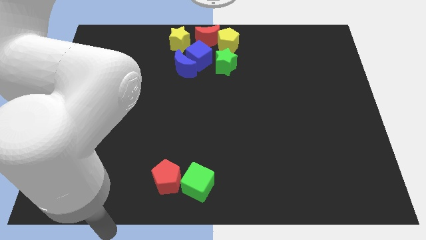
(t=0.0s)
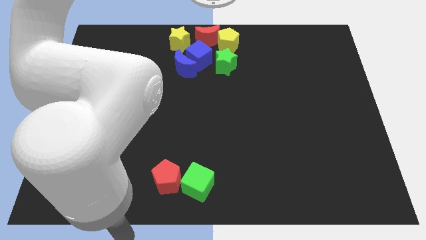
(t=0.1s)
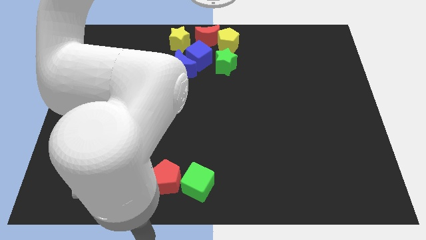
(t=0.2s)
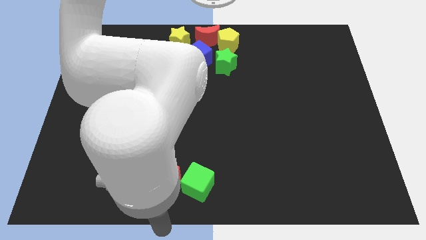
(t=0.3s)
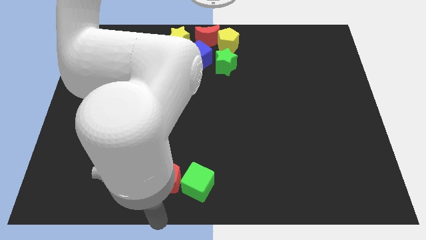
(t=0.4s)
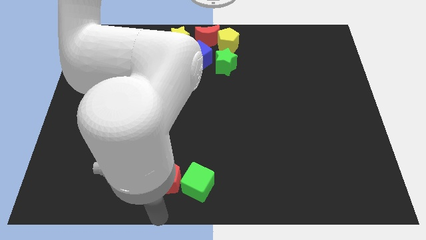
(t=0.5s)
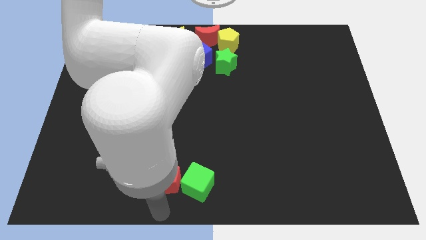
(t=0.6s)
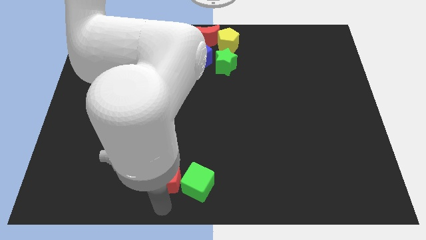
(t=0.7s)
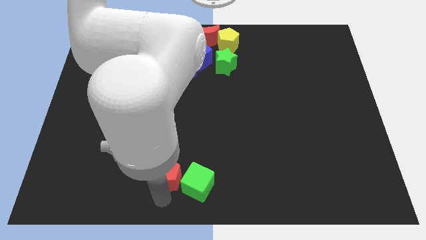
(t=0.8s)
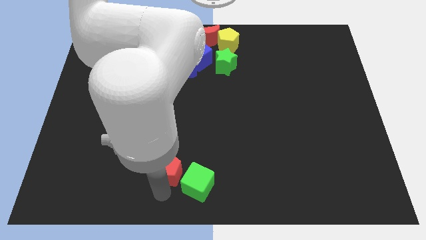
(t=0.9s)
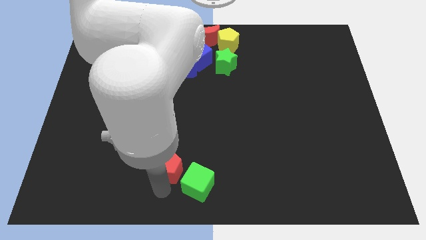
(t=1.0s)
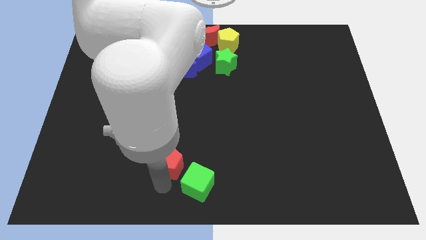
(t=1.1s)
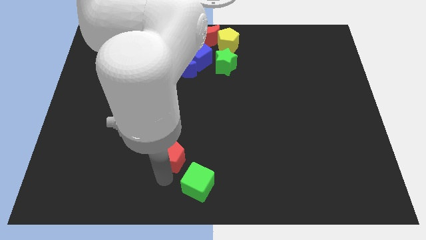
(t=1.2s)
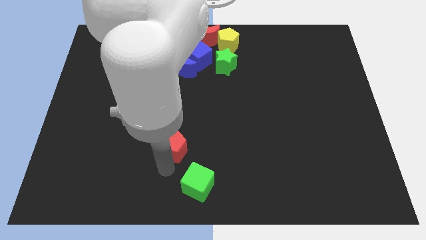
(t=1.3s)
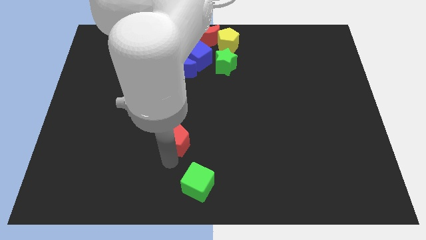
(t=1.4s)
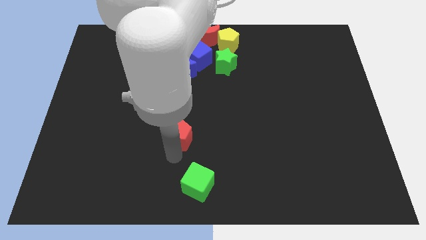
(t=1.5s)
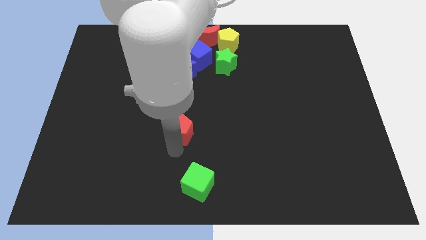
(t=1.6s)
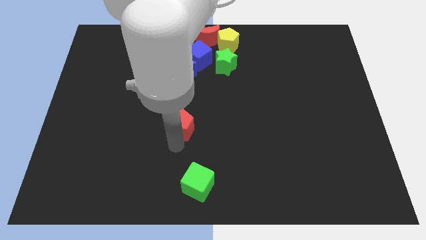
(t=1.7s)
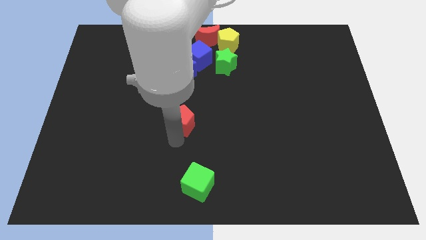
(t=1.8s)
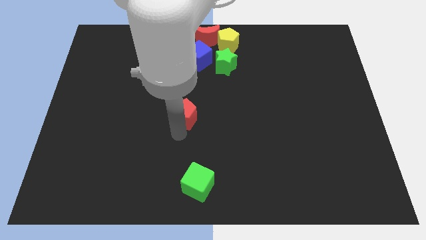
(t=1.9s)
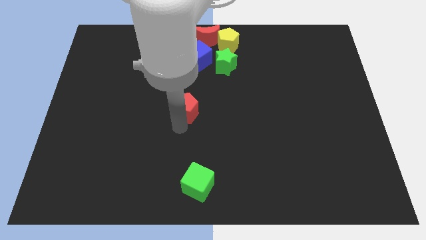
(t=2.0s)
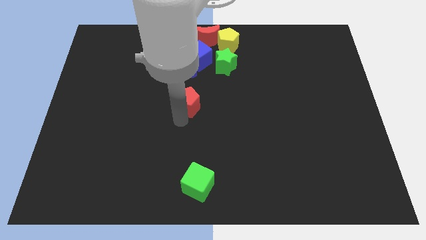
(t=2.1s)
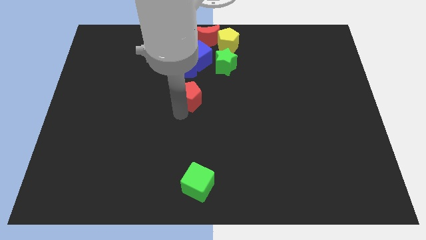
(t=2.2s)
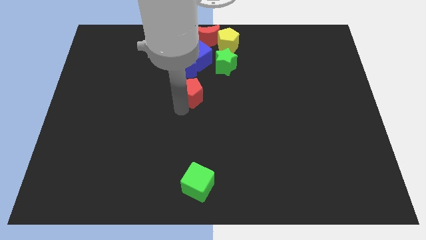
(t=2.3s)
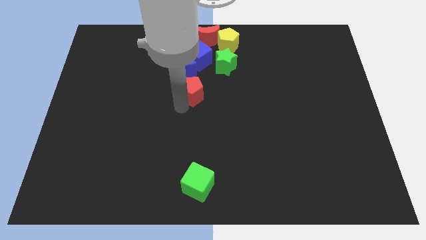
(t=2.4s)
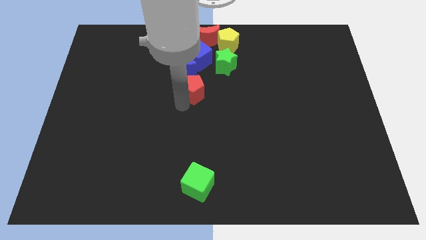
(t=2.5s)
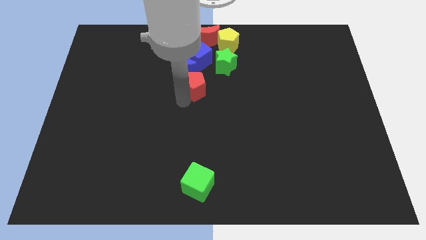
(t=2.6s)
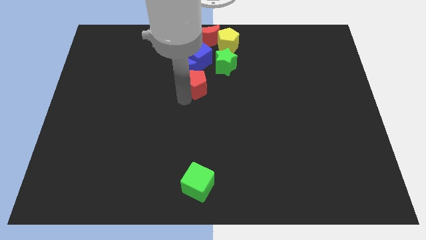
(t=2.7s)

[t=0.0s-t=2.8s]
separate red pentagon from green cube

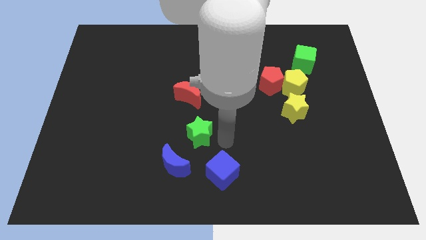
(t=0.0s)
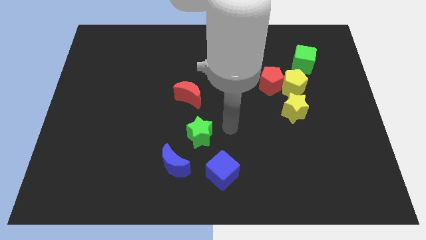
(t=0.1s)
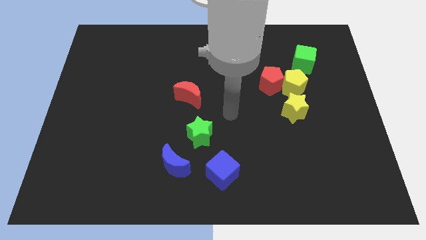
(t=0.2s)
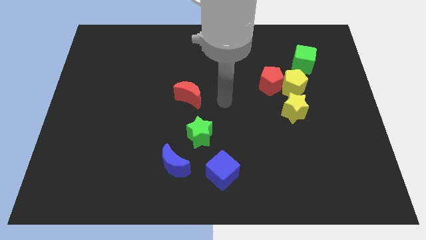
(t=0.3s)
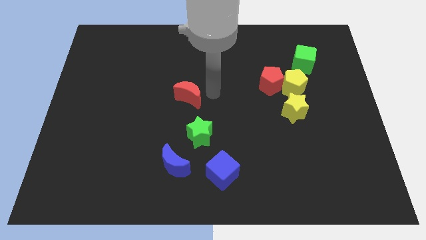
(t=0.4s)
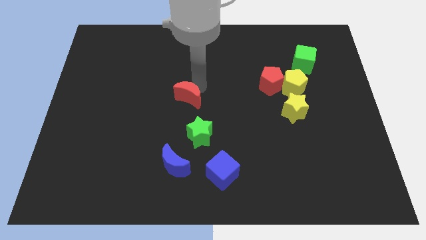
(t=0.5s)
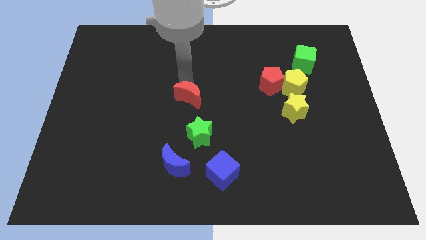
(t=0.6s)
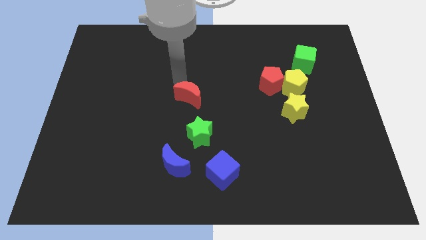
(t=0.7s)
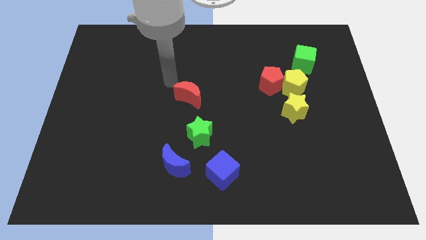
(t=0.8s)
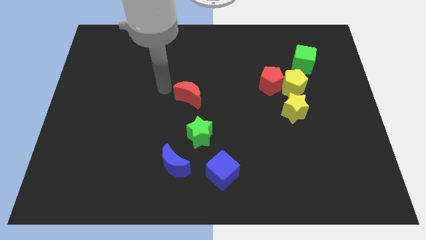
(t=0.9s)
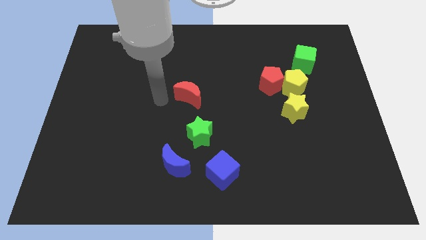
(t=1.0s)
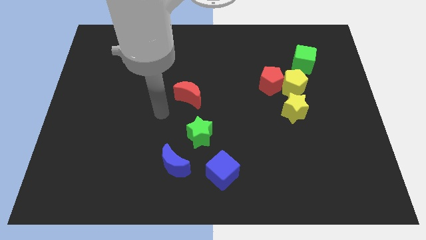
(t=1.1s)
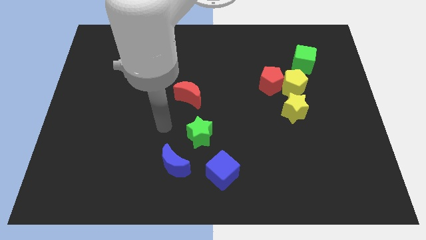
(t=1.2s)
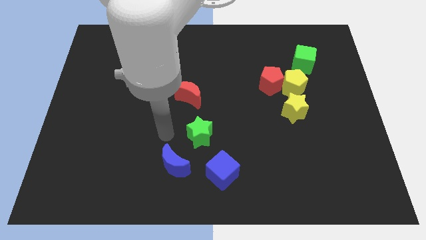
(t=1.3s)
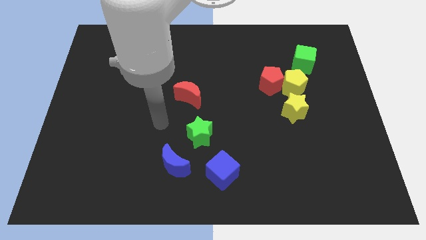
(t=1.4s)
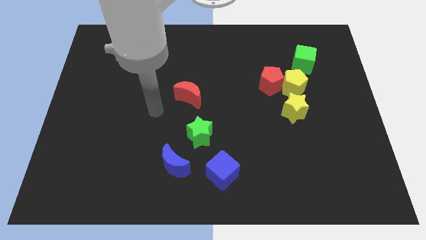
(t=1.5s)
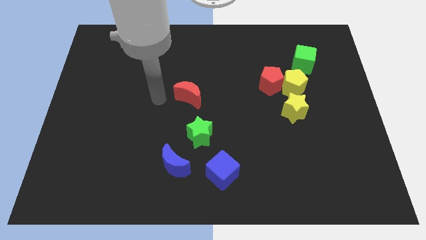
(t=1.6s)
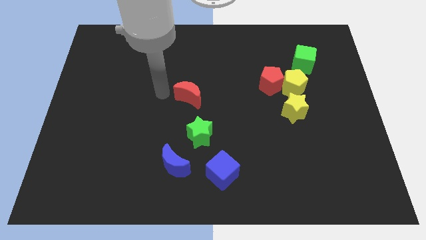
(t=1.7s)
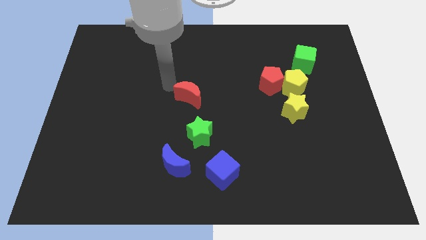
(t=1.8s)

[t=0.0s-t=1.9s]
move the arm towards the blue crescent

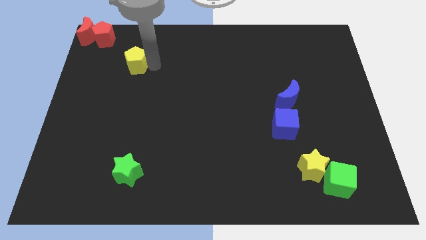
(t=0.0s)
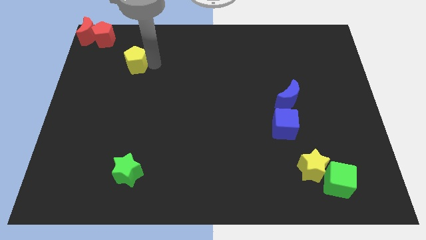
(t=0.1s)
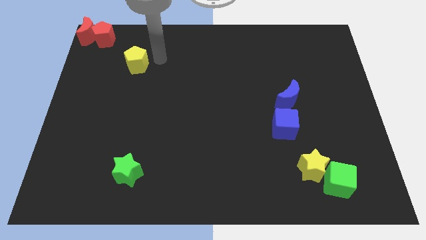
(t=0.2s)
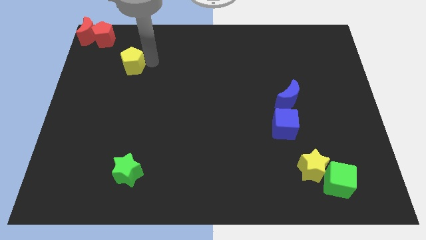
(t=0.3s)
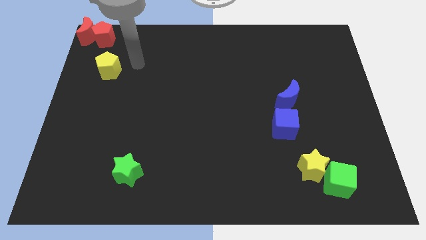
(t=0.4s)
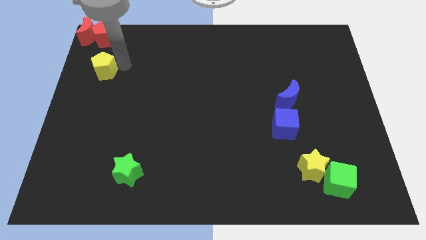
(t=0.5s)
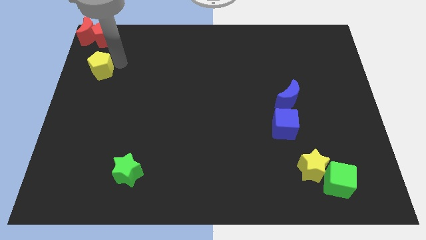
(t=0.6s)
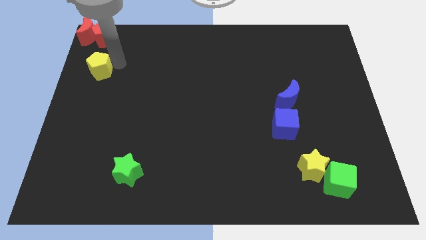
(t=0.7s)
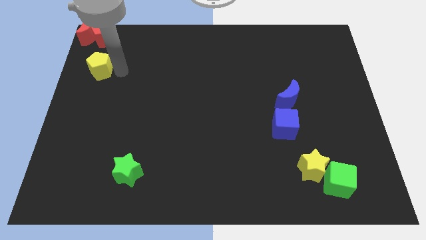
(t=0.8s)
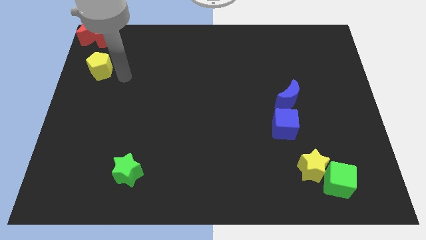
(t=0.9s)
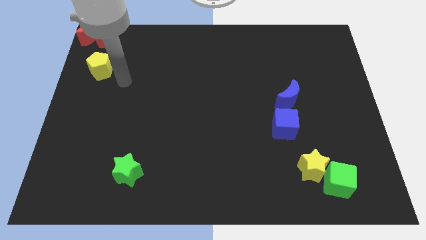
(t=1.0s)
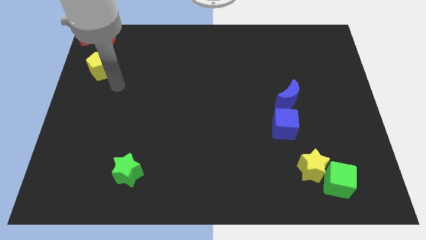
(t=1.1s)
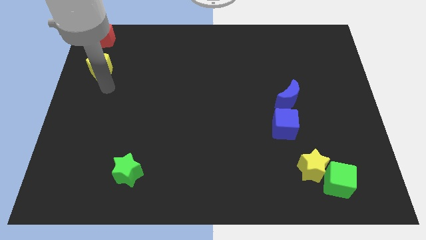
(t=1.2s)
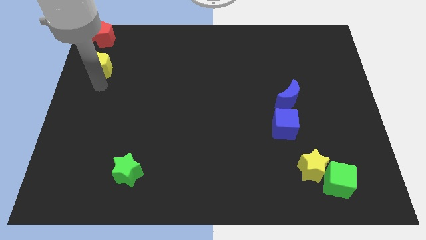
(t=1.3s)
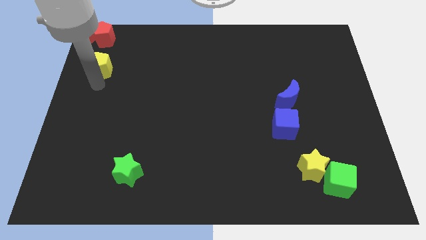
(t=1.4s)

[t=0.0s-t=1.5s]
place the yellow pentagon below the red pentagon

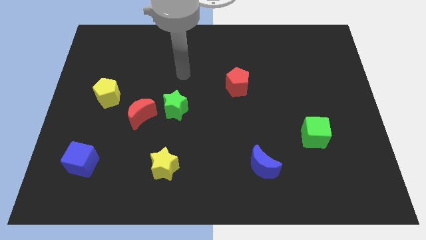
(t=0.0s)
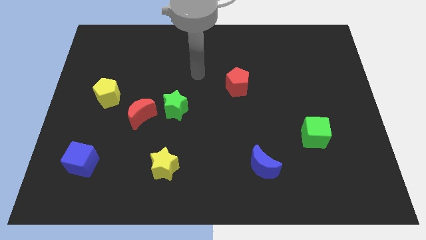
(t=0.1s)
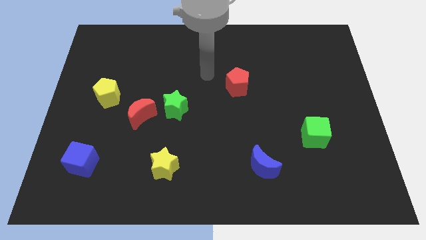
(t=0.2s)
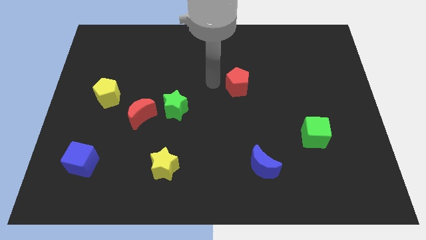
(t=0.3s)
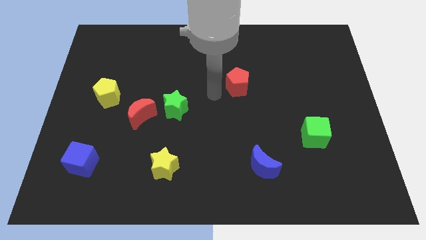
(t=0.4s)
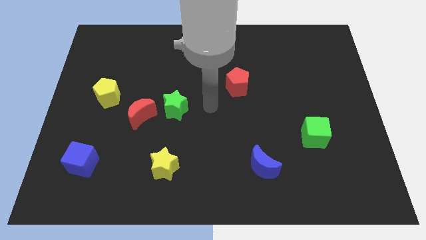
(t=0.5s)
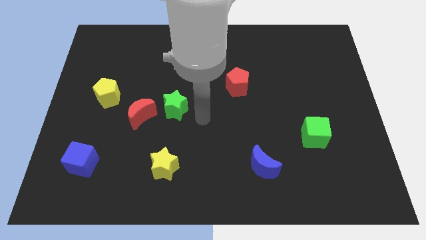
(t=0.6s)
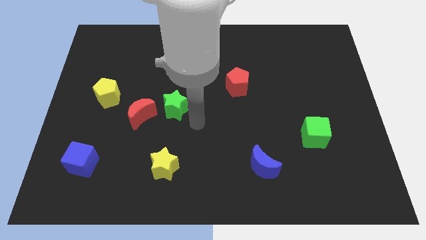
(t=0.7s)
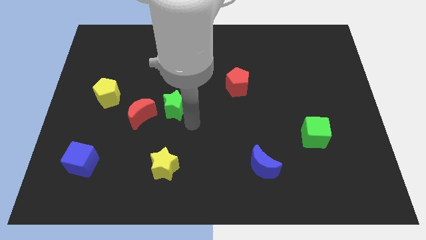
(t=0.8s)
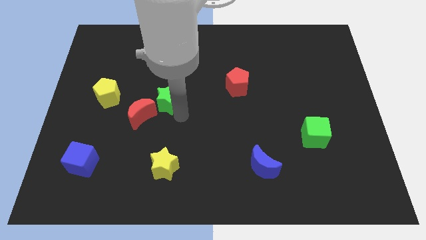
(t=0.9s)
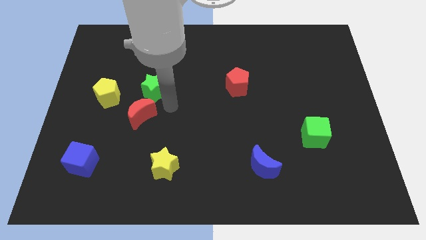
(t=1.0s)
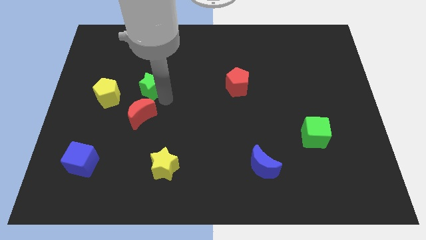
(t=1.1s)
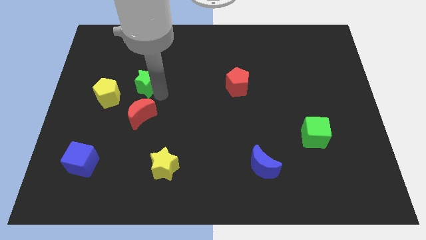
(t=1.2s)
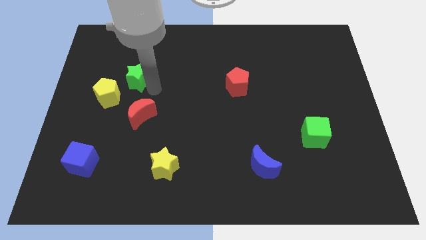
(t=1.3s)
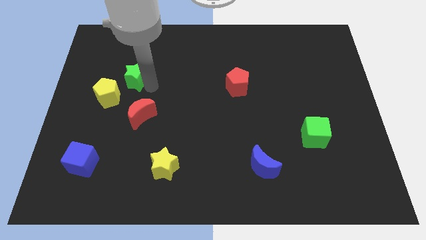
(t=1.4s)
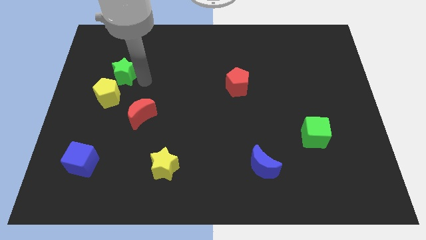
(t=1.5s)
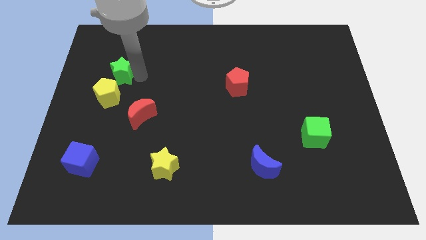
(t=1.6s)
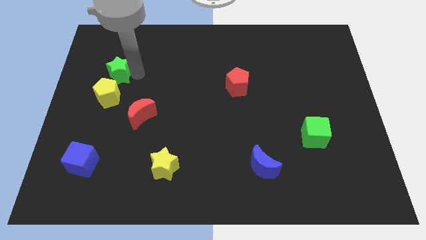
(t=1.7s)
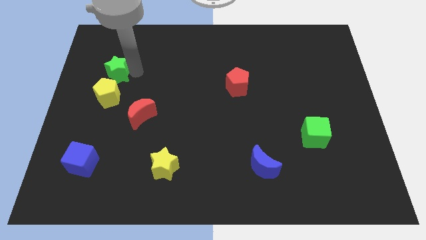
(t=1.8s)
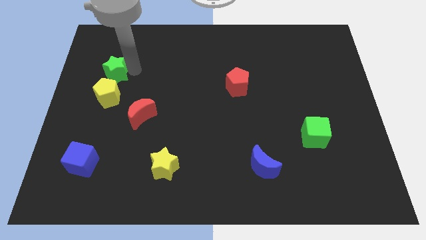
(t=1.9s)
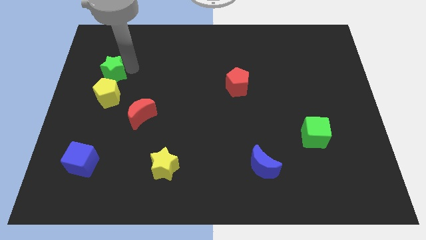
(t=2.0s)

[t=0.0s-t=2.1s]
put the green star above the yellow pentagon

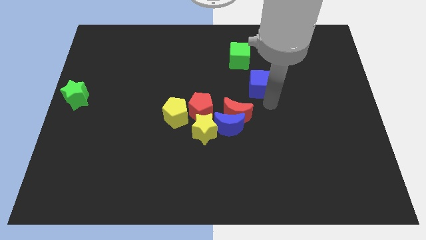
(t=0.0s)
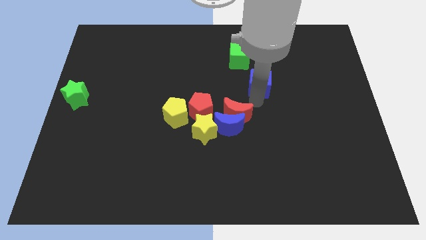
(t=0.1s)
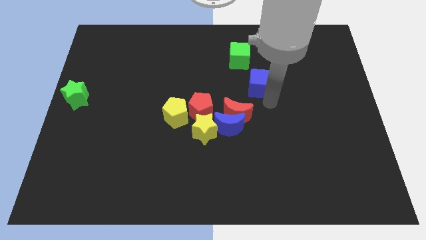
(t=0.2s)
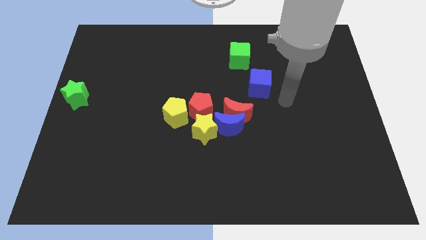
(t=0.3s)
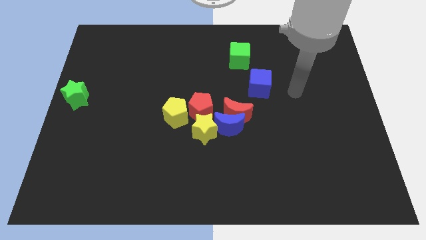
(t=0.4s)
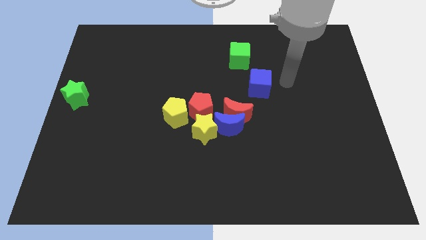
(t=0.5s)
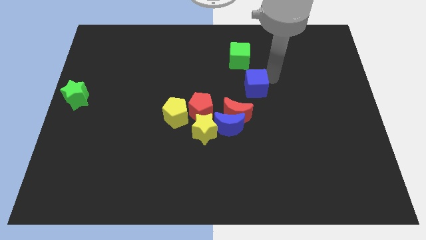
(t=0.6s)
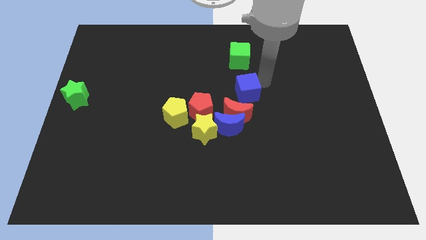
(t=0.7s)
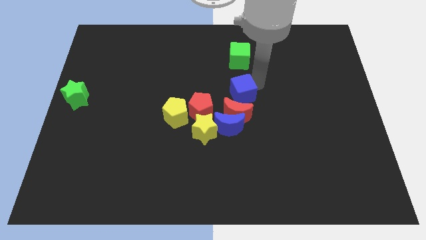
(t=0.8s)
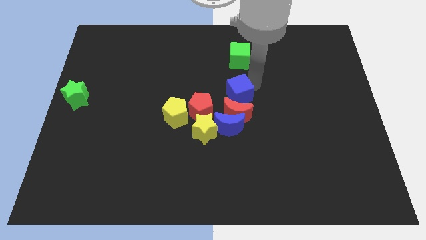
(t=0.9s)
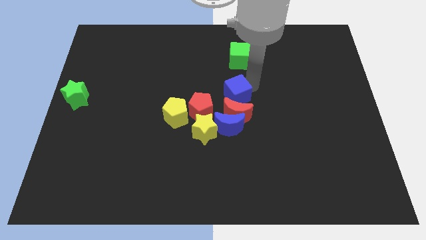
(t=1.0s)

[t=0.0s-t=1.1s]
move the blue cube at the top side of the red moon
